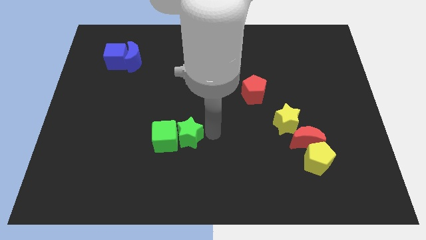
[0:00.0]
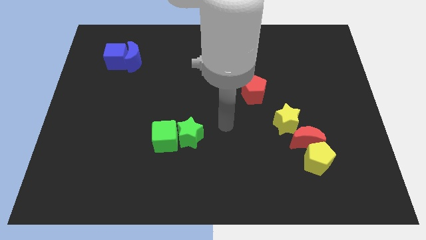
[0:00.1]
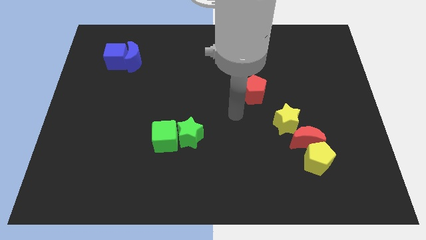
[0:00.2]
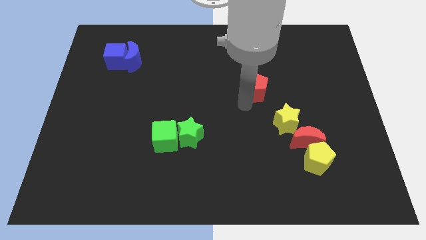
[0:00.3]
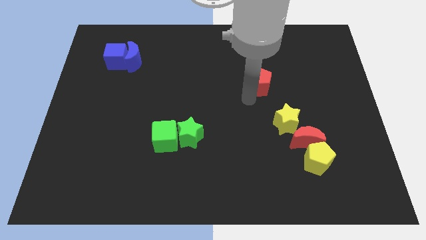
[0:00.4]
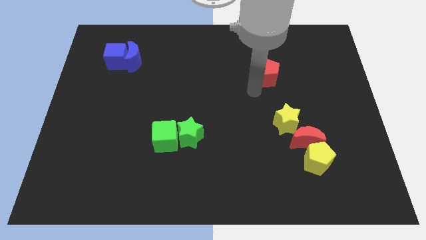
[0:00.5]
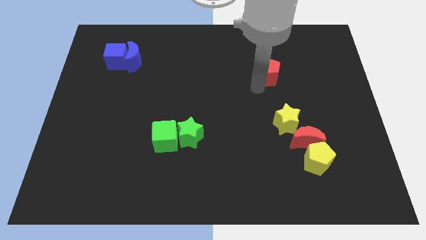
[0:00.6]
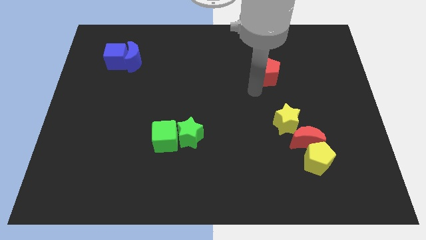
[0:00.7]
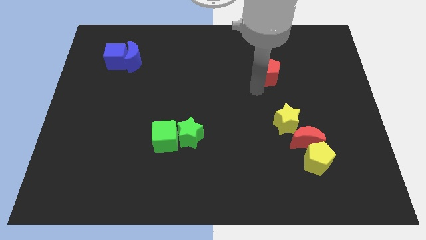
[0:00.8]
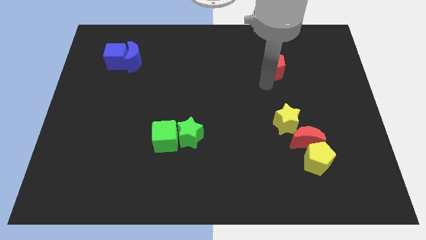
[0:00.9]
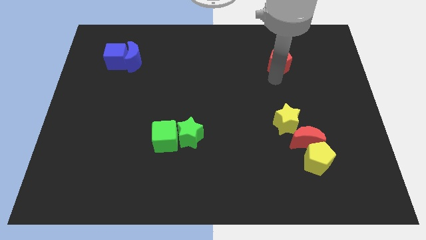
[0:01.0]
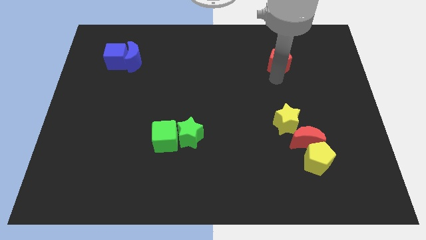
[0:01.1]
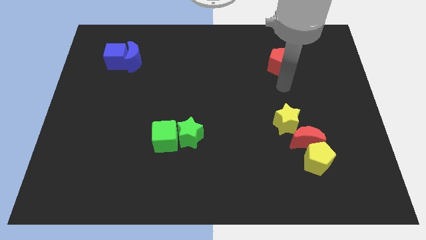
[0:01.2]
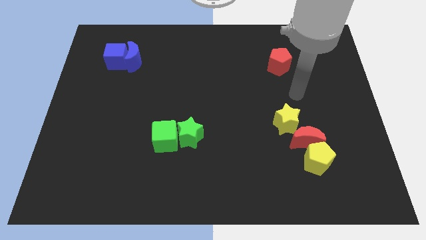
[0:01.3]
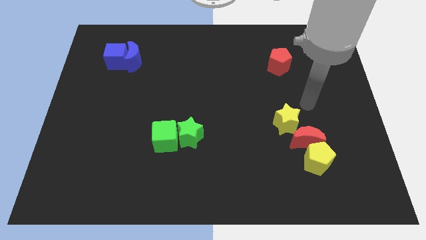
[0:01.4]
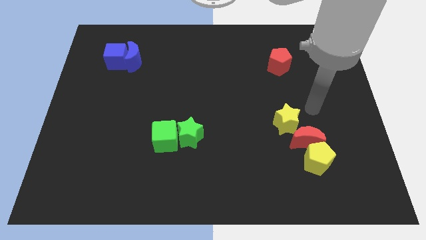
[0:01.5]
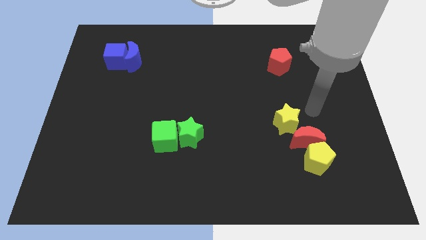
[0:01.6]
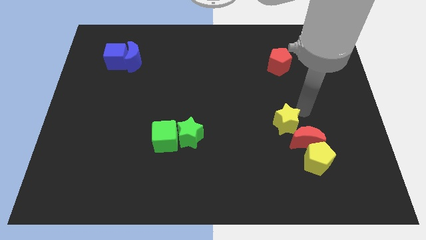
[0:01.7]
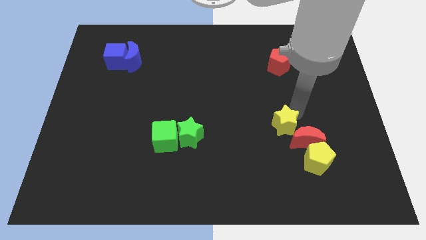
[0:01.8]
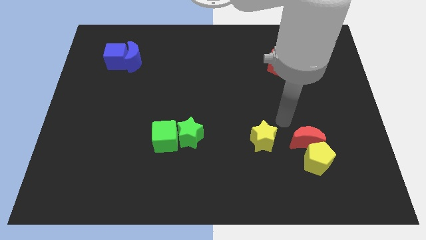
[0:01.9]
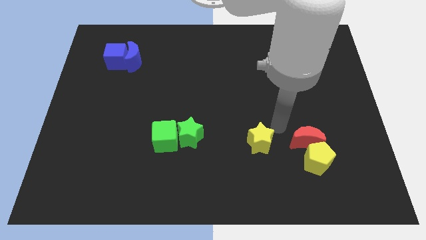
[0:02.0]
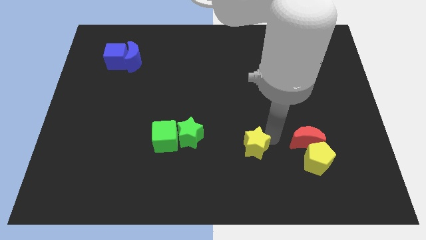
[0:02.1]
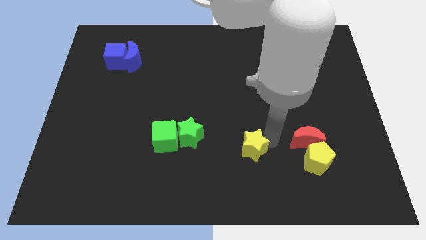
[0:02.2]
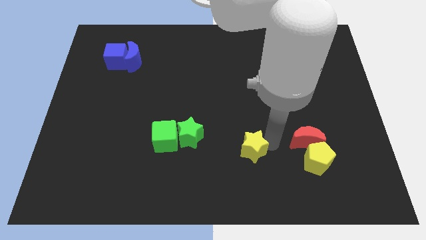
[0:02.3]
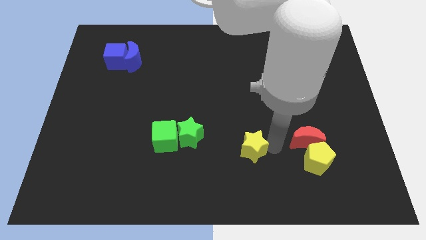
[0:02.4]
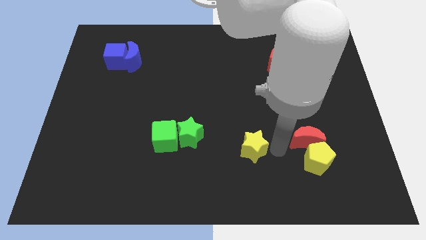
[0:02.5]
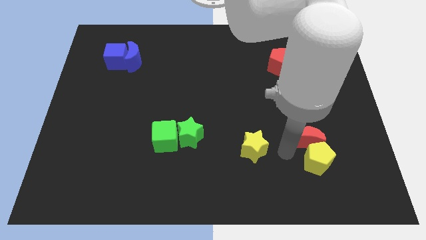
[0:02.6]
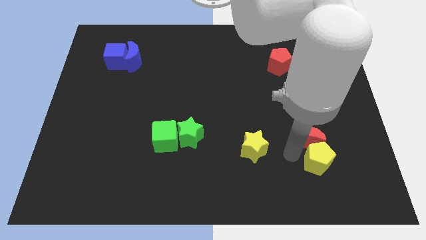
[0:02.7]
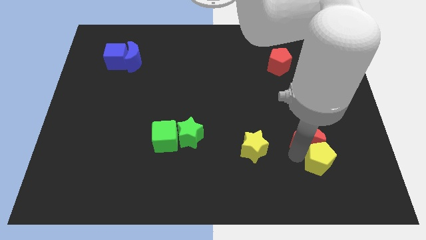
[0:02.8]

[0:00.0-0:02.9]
push the red pentagon towards the top side of the board and yellow star towards the bottom

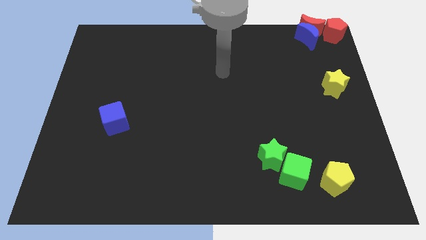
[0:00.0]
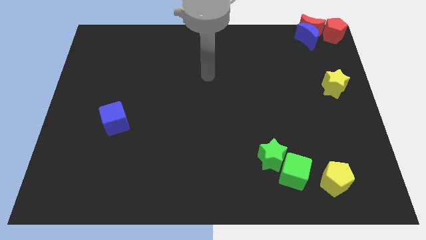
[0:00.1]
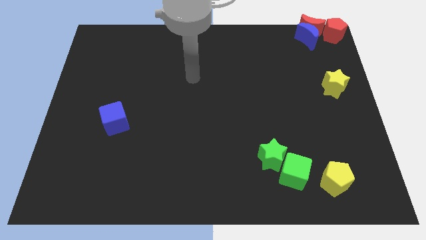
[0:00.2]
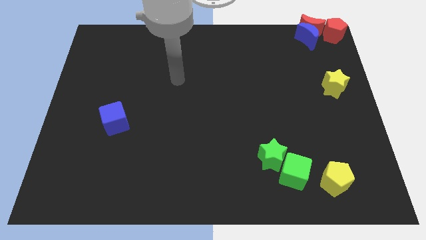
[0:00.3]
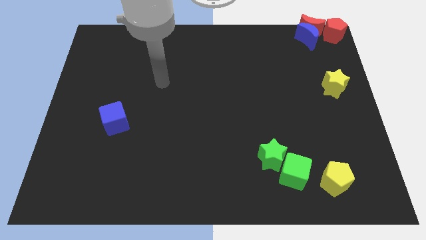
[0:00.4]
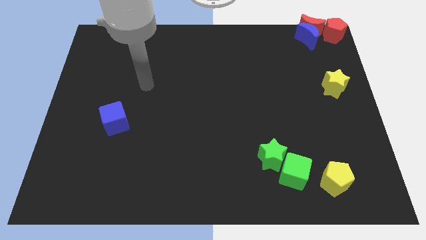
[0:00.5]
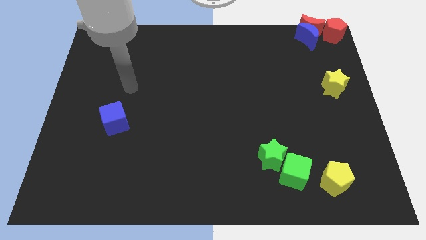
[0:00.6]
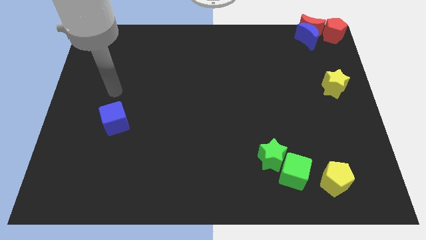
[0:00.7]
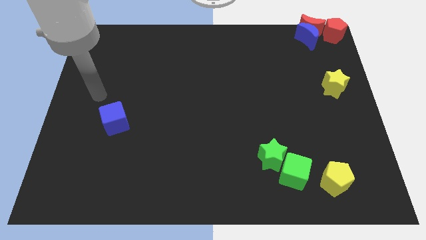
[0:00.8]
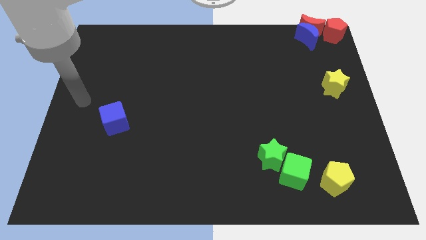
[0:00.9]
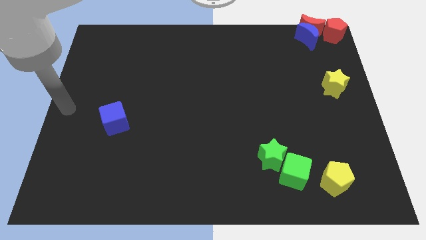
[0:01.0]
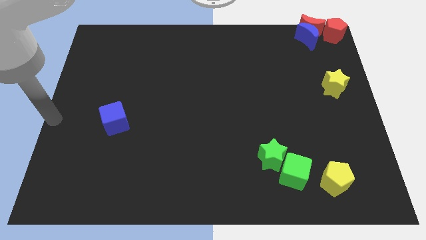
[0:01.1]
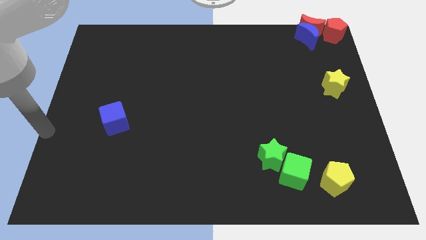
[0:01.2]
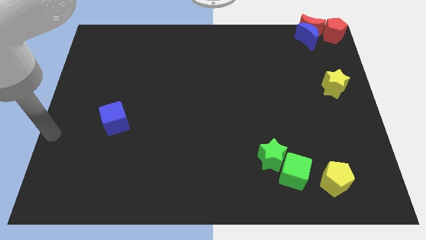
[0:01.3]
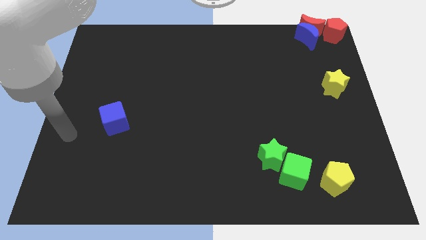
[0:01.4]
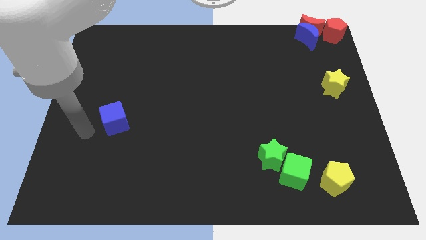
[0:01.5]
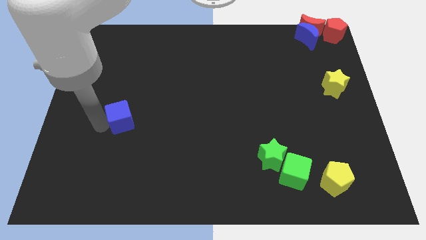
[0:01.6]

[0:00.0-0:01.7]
move your arm to the left of blue cube

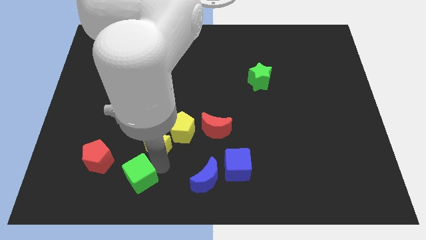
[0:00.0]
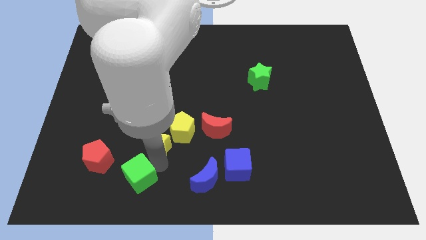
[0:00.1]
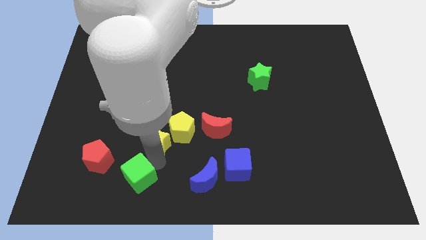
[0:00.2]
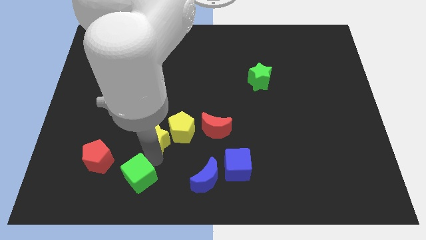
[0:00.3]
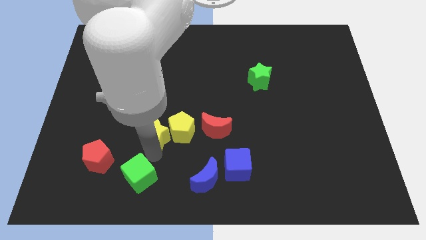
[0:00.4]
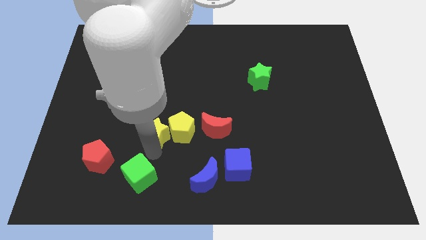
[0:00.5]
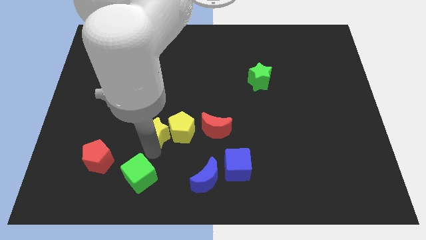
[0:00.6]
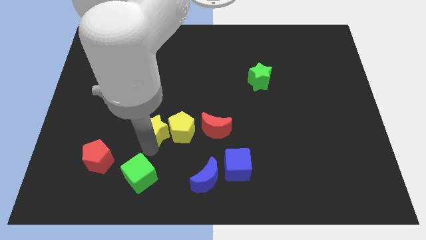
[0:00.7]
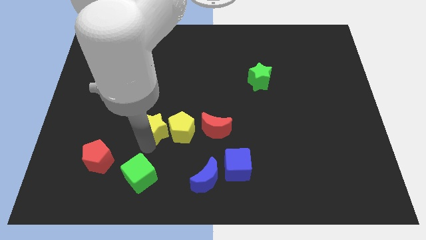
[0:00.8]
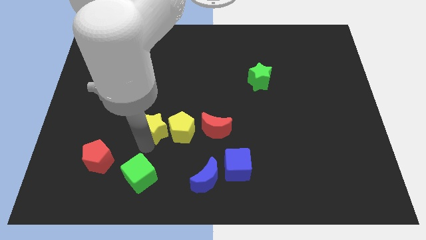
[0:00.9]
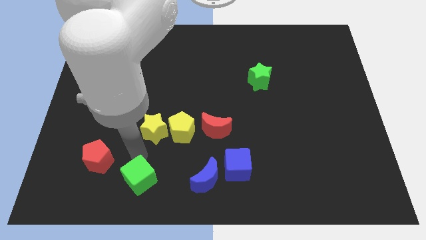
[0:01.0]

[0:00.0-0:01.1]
separate yellow star and green cube

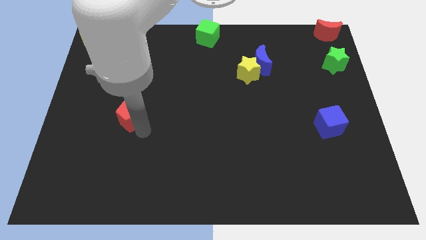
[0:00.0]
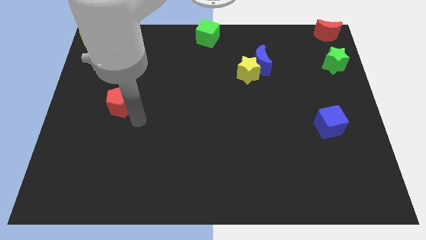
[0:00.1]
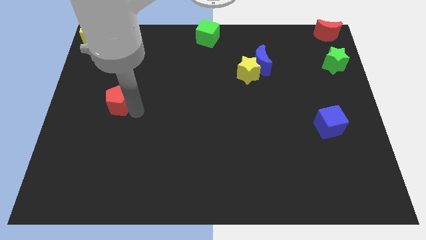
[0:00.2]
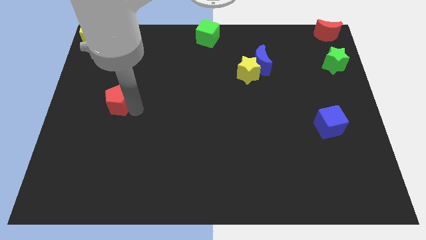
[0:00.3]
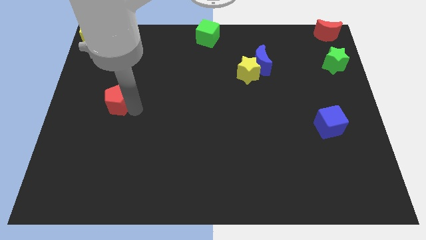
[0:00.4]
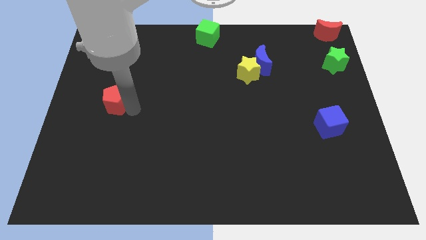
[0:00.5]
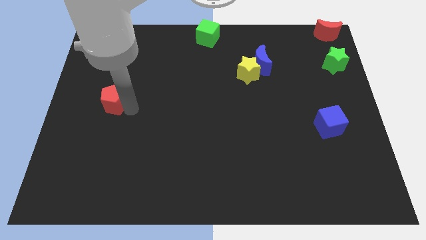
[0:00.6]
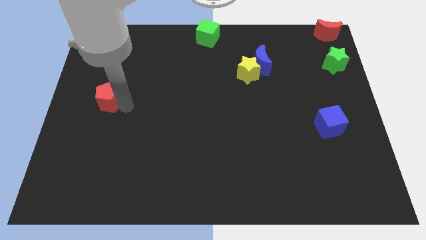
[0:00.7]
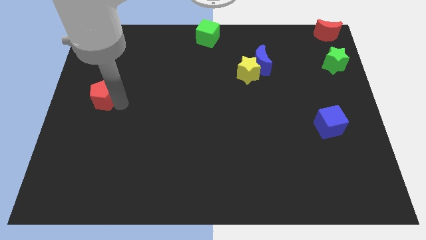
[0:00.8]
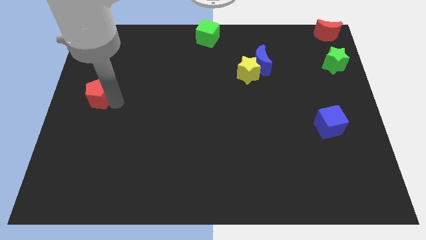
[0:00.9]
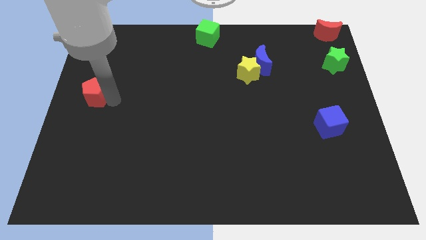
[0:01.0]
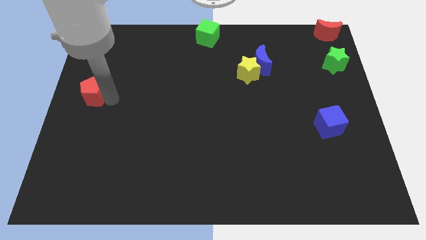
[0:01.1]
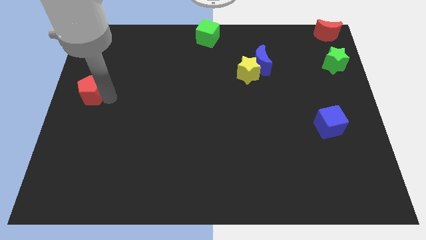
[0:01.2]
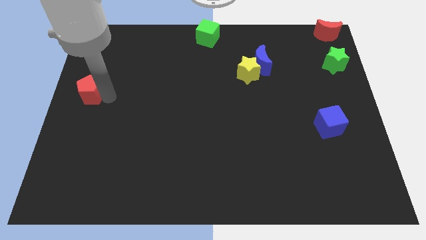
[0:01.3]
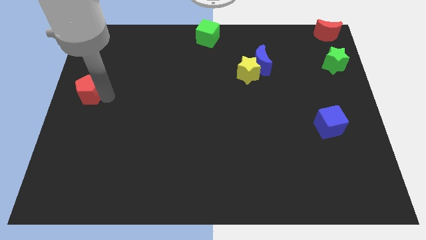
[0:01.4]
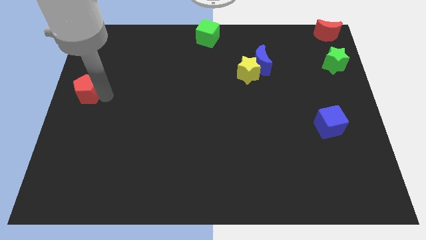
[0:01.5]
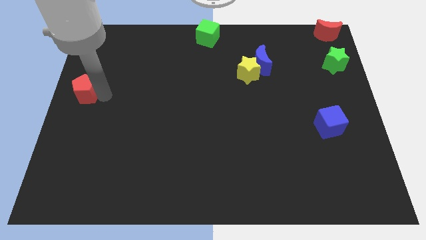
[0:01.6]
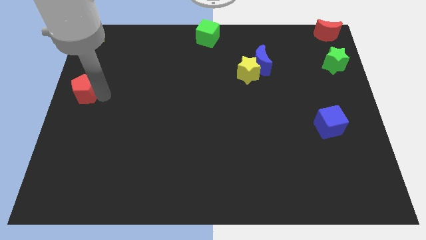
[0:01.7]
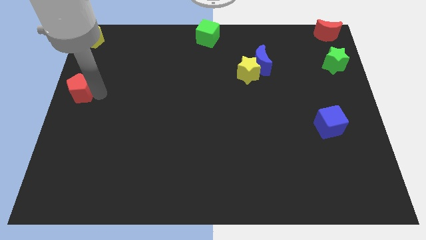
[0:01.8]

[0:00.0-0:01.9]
place the red pentagon below the yellow pentagon

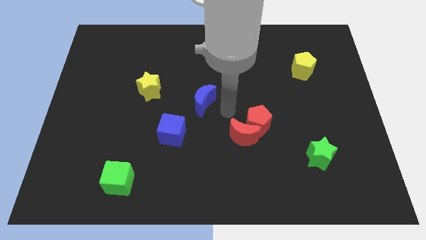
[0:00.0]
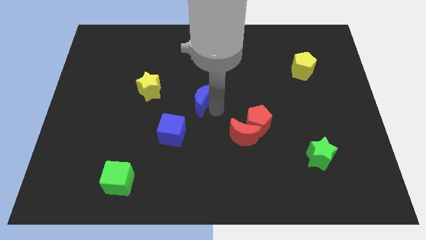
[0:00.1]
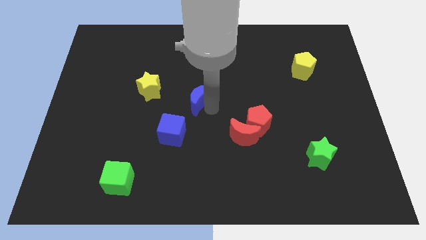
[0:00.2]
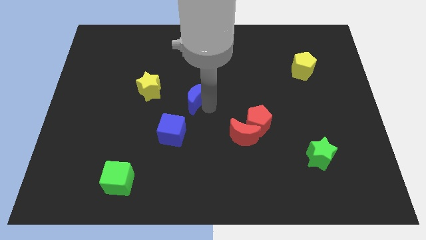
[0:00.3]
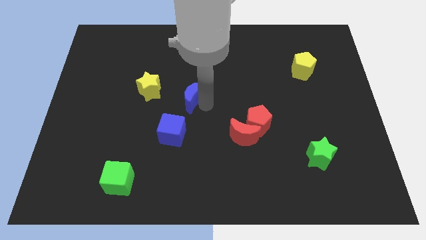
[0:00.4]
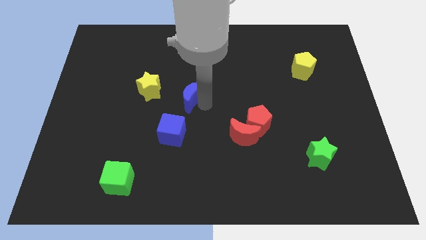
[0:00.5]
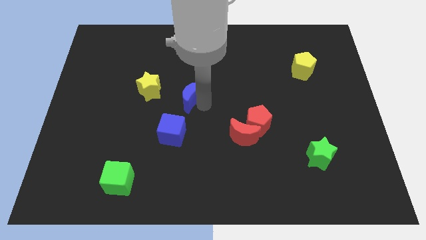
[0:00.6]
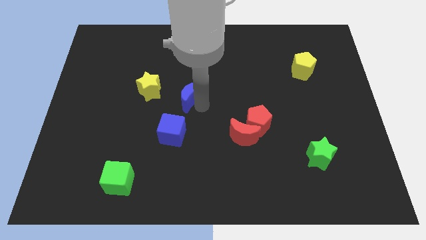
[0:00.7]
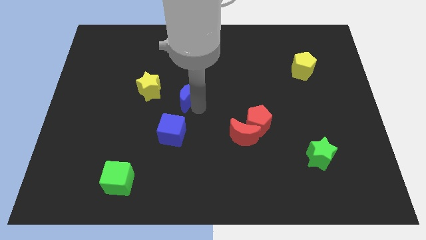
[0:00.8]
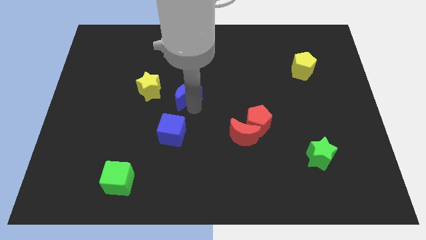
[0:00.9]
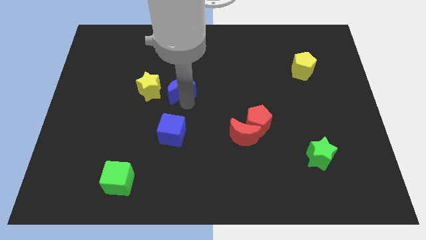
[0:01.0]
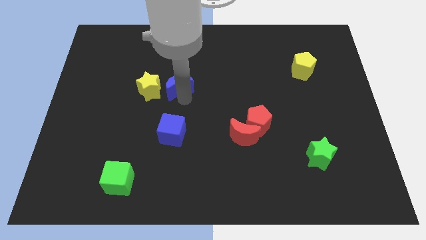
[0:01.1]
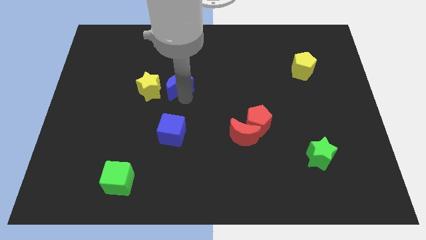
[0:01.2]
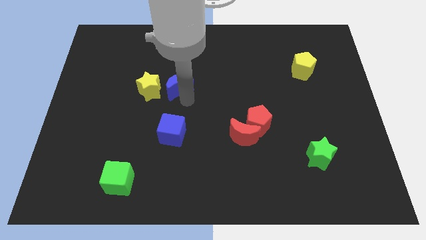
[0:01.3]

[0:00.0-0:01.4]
move blue crescent to the right of yellow star
